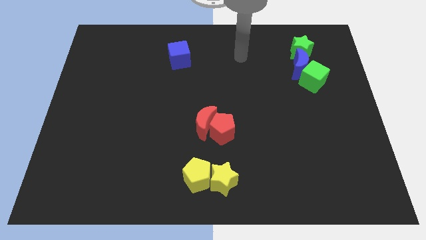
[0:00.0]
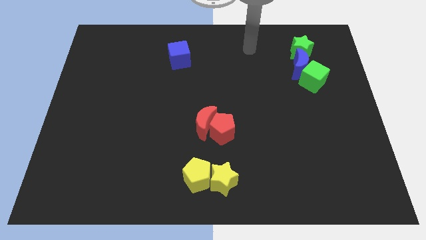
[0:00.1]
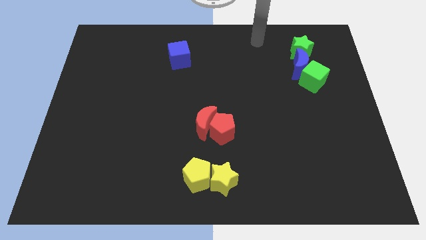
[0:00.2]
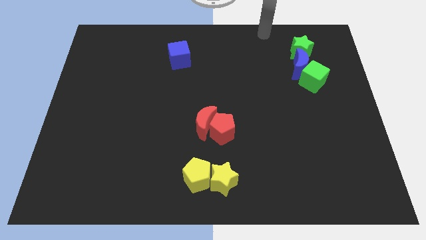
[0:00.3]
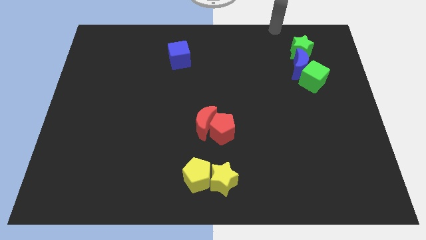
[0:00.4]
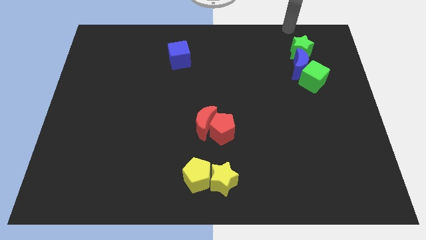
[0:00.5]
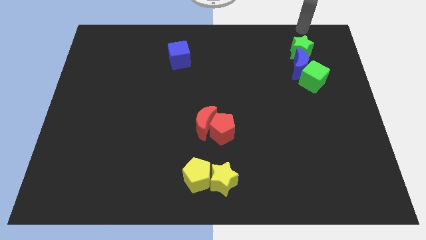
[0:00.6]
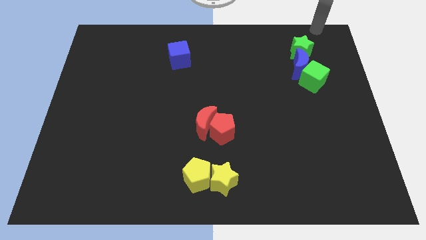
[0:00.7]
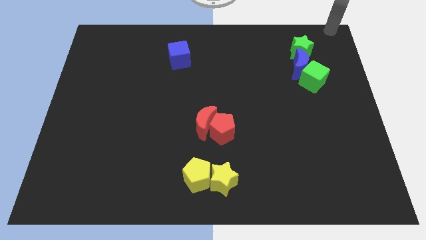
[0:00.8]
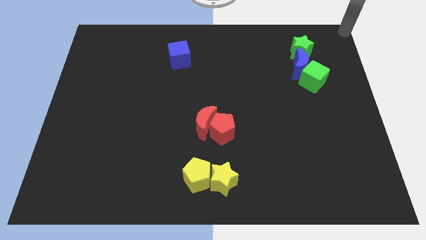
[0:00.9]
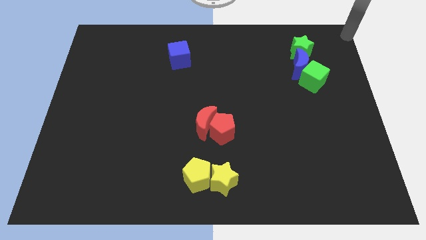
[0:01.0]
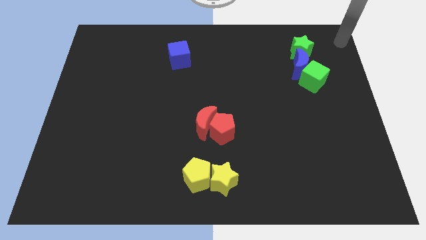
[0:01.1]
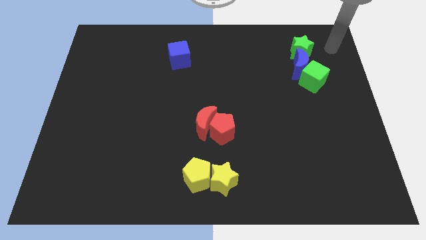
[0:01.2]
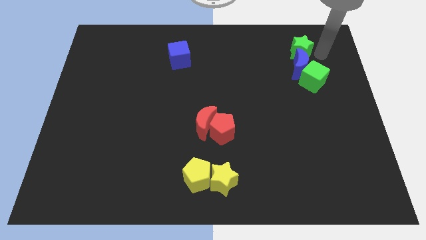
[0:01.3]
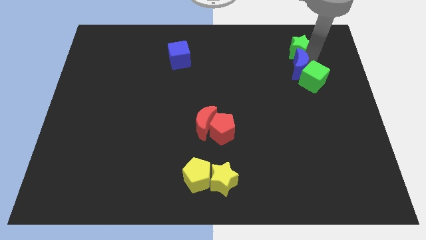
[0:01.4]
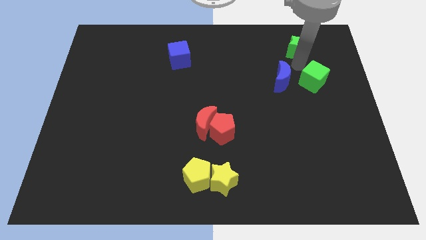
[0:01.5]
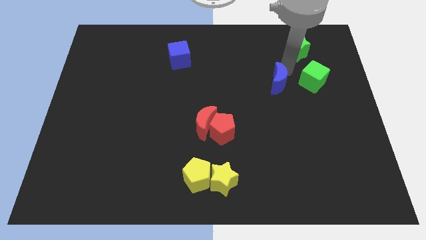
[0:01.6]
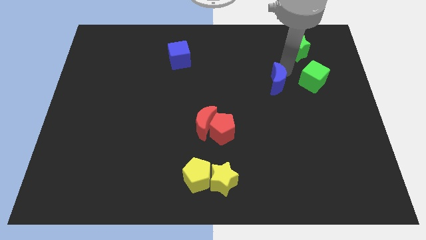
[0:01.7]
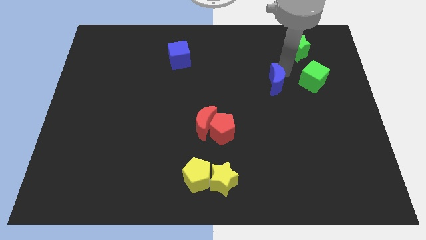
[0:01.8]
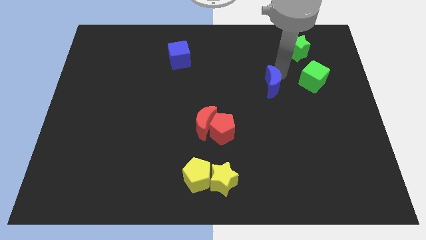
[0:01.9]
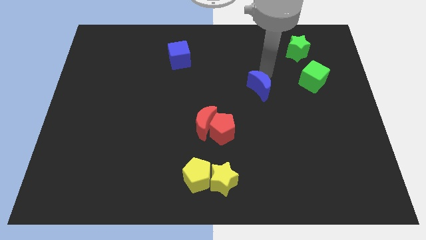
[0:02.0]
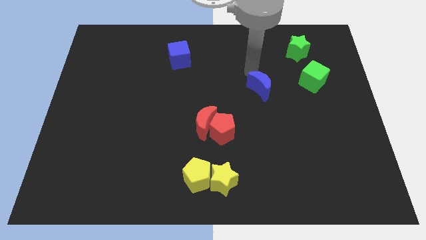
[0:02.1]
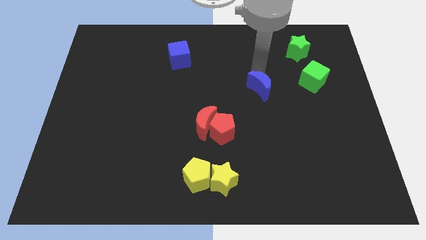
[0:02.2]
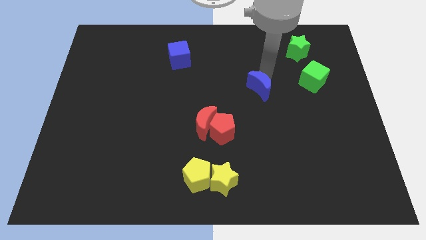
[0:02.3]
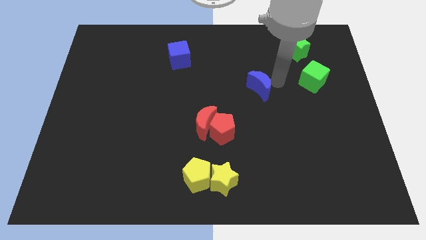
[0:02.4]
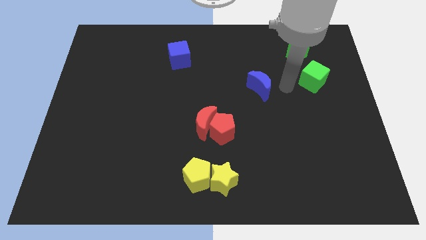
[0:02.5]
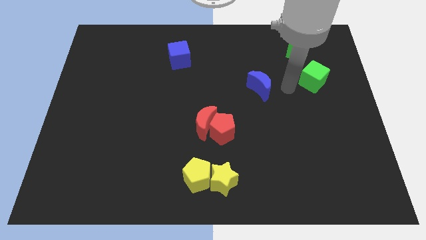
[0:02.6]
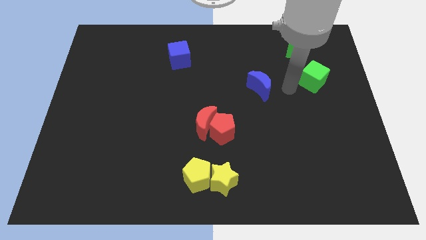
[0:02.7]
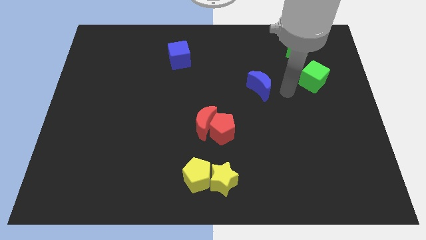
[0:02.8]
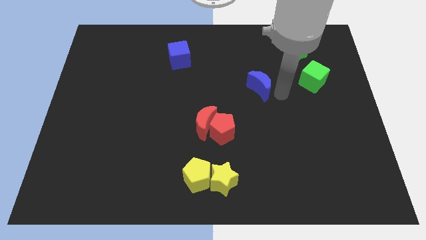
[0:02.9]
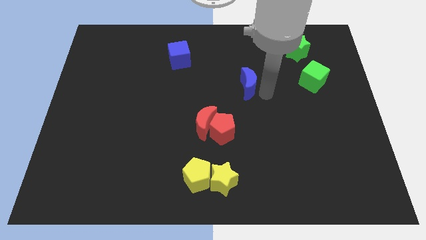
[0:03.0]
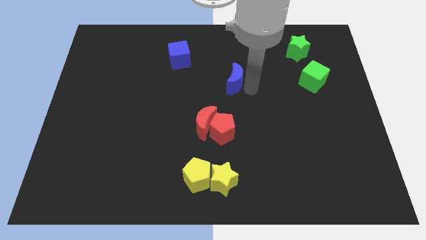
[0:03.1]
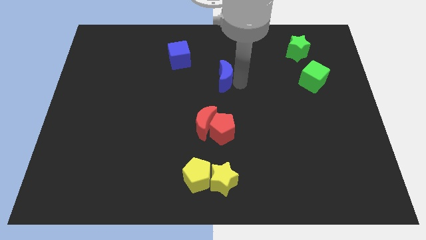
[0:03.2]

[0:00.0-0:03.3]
place the blue moon above the red pentagon

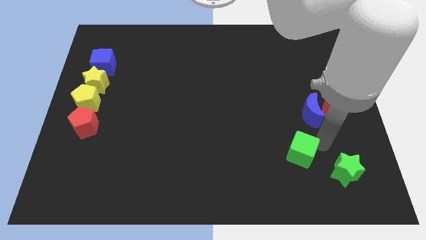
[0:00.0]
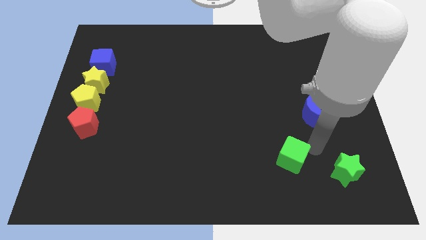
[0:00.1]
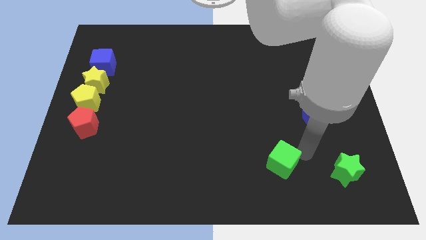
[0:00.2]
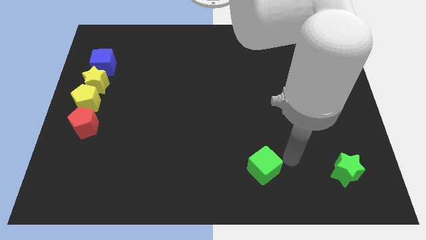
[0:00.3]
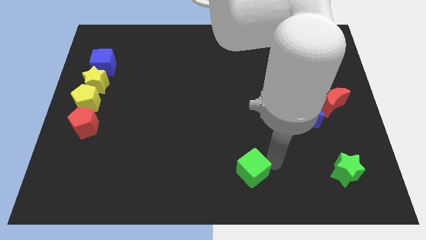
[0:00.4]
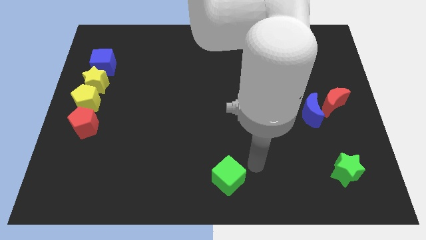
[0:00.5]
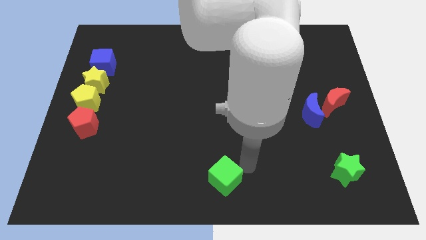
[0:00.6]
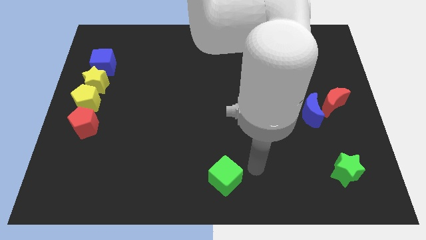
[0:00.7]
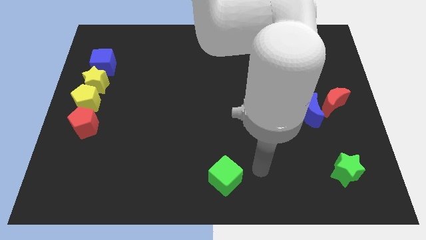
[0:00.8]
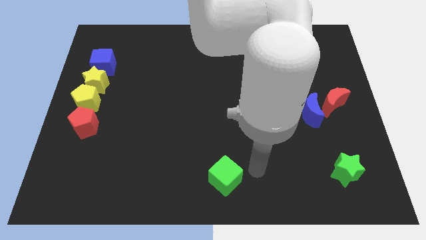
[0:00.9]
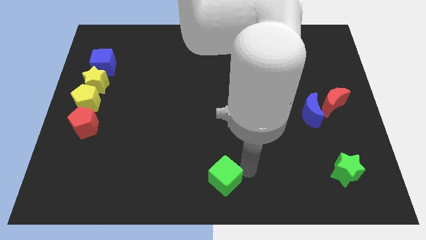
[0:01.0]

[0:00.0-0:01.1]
place green star at the bottom center of the board

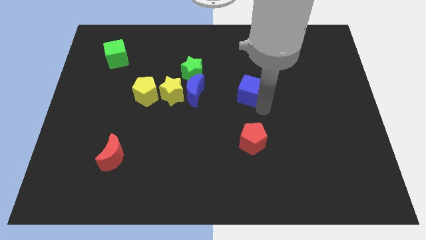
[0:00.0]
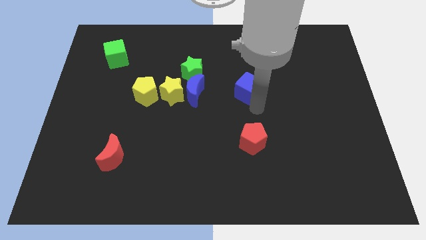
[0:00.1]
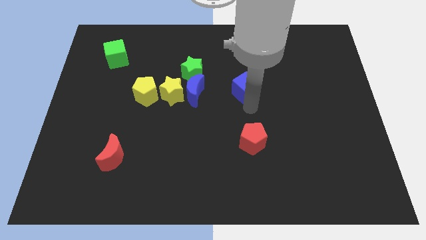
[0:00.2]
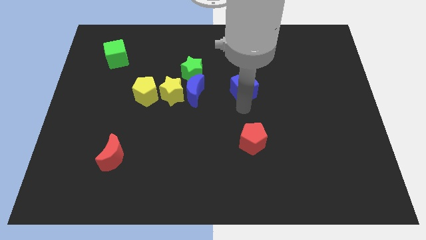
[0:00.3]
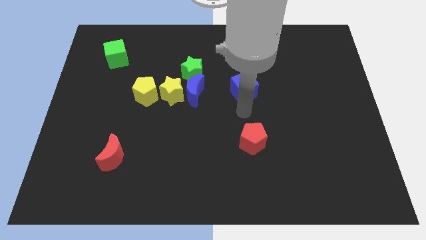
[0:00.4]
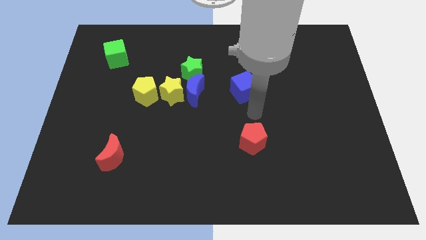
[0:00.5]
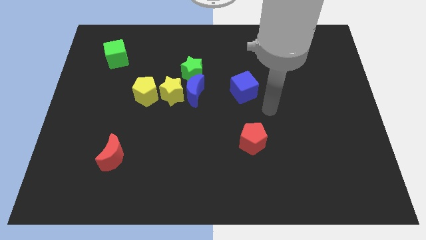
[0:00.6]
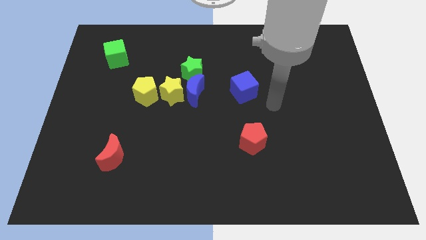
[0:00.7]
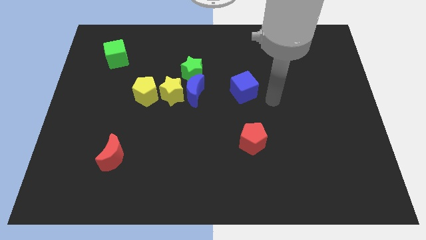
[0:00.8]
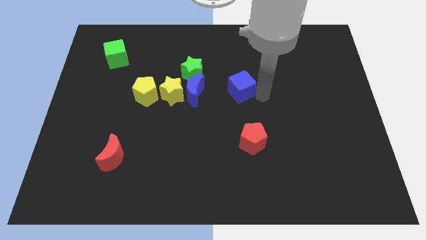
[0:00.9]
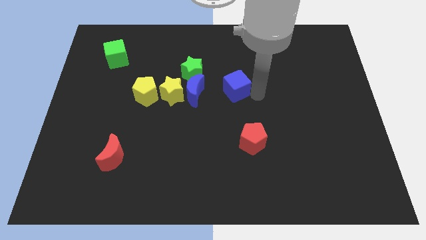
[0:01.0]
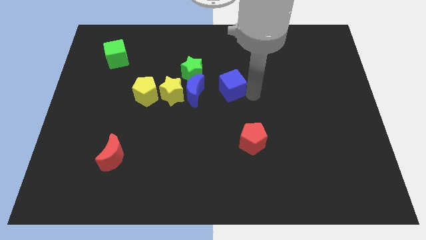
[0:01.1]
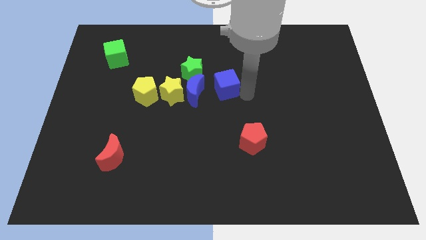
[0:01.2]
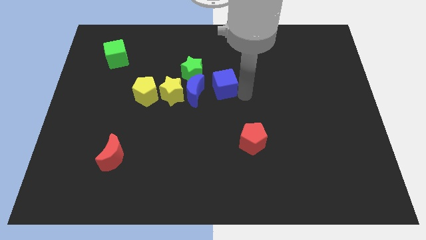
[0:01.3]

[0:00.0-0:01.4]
push the blue cube close to the blue crescent

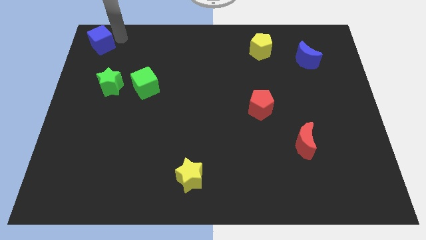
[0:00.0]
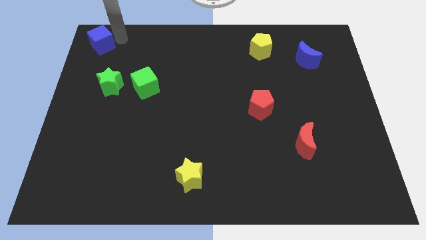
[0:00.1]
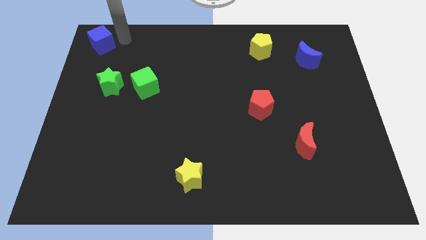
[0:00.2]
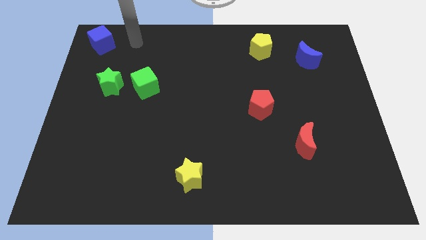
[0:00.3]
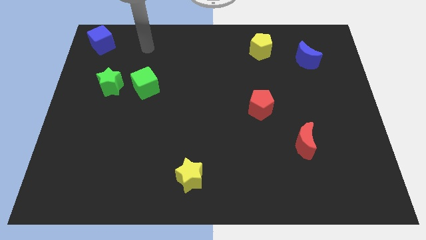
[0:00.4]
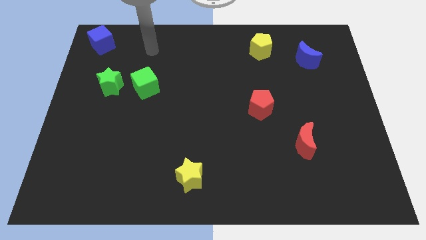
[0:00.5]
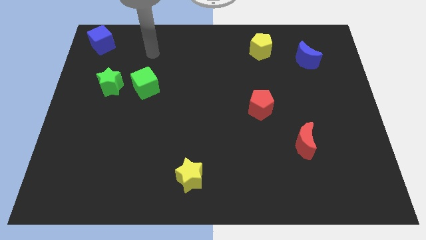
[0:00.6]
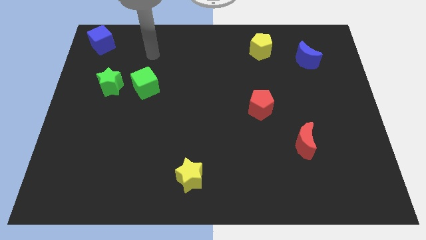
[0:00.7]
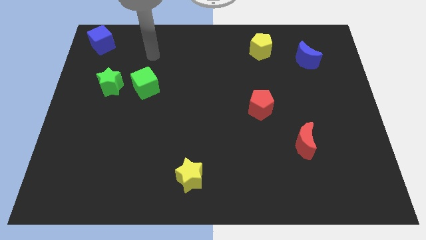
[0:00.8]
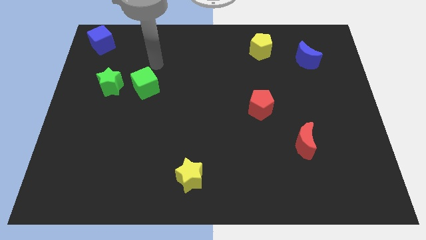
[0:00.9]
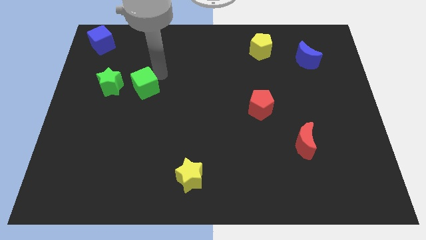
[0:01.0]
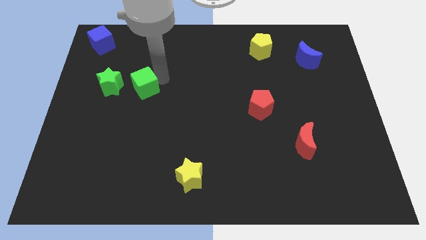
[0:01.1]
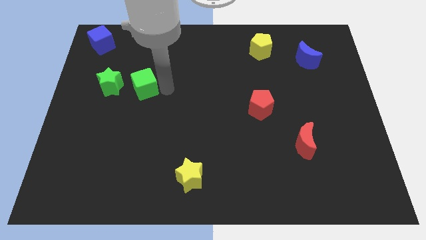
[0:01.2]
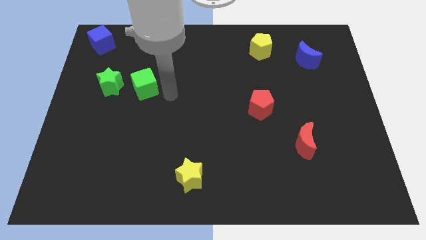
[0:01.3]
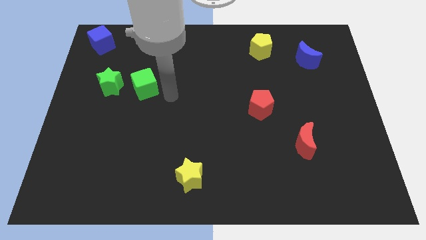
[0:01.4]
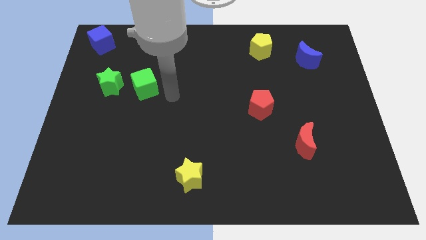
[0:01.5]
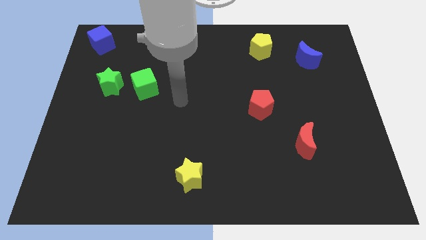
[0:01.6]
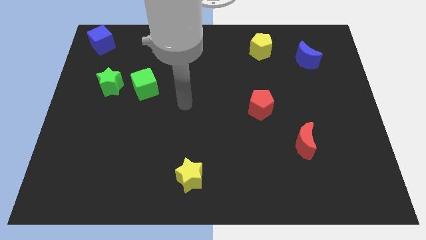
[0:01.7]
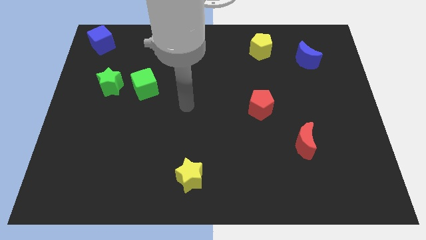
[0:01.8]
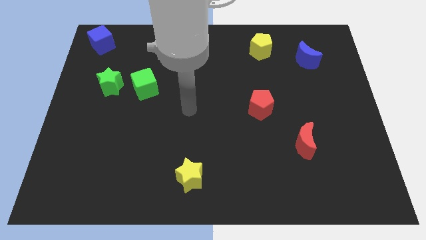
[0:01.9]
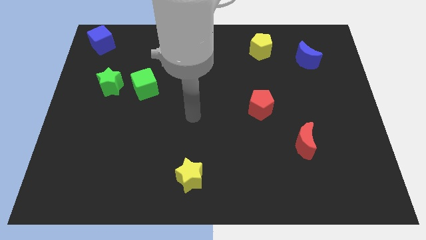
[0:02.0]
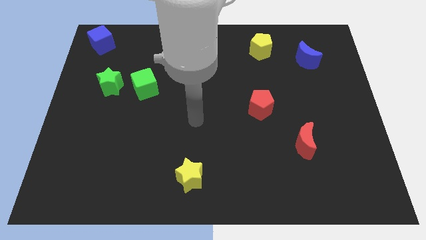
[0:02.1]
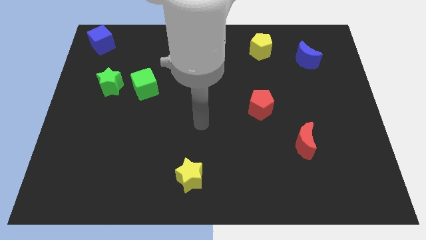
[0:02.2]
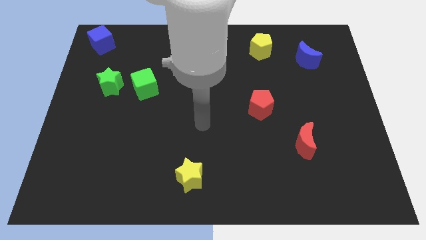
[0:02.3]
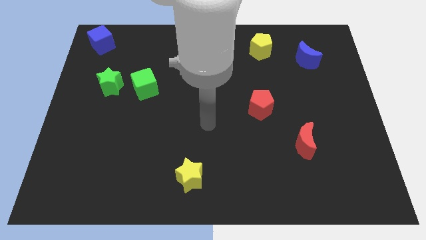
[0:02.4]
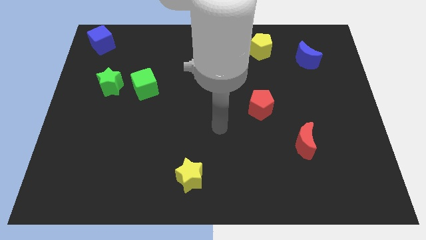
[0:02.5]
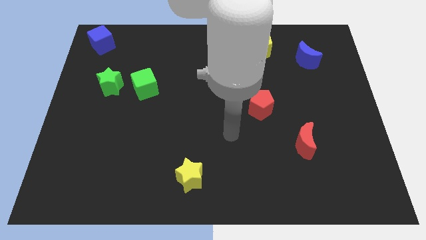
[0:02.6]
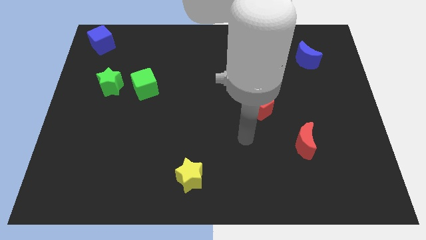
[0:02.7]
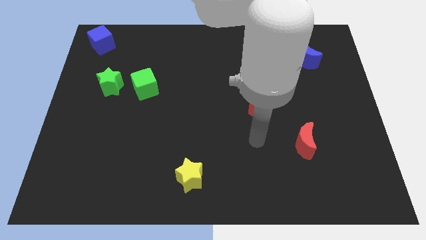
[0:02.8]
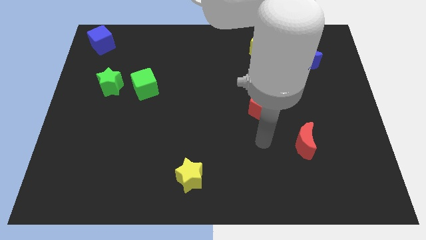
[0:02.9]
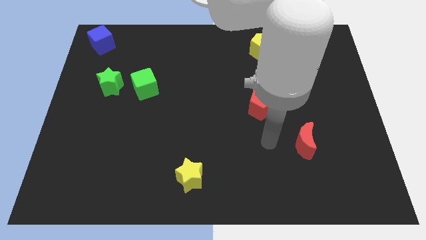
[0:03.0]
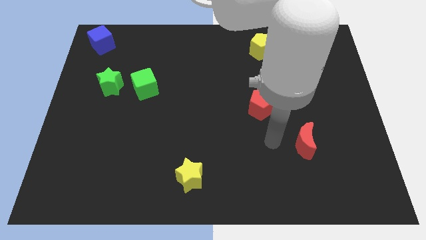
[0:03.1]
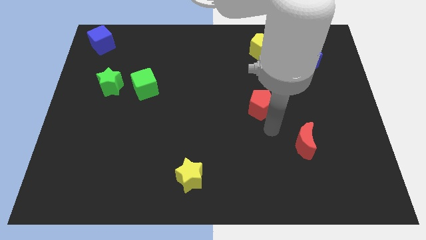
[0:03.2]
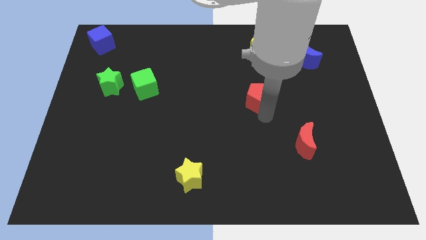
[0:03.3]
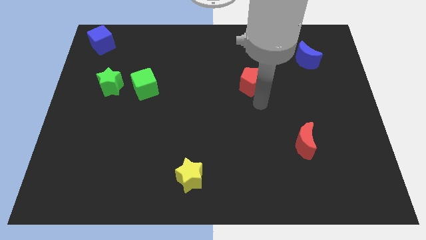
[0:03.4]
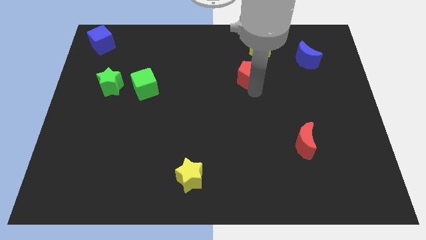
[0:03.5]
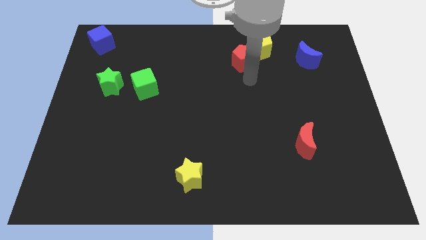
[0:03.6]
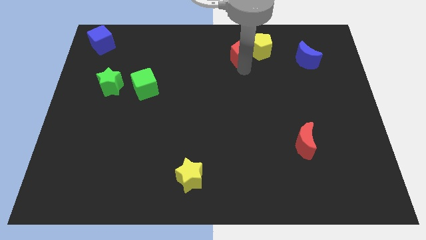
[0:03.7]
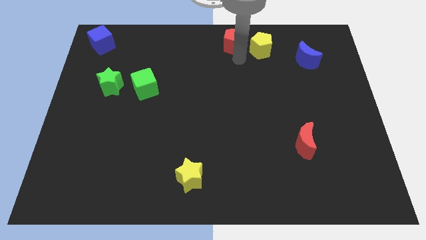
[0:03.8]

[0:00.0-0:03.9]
push the red pentagon to the left of the yellow pentagon
